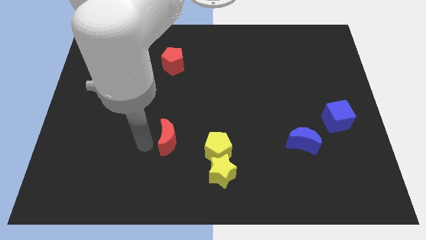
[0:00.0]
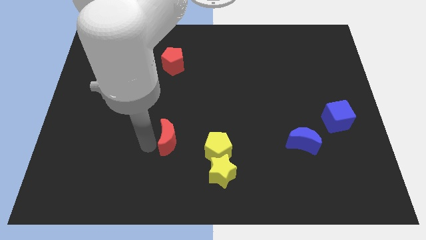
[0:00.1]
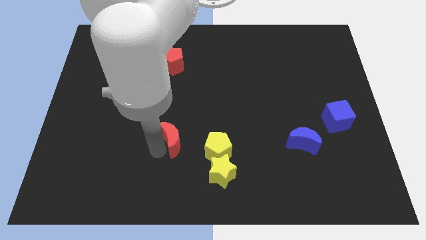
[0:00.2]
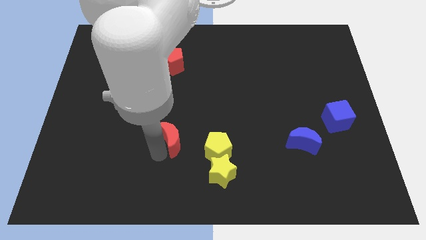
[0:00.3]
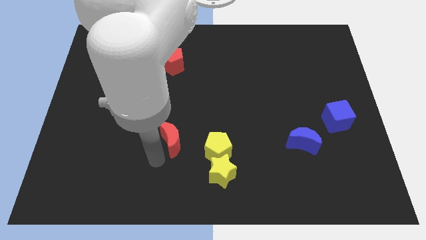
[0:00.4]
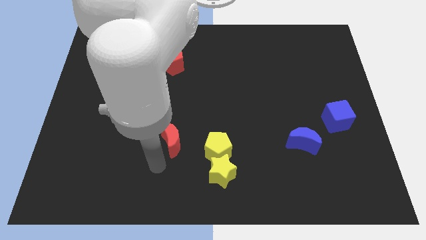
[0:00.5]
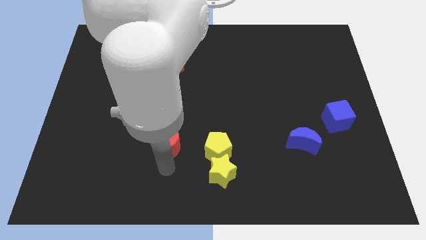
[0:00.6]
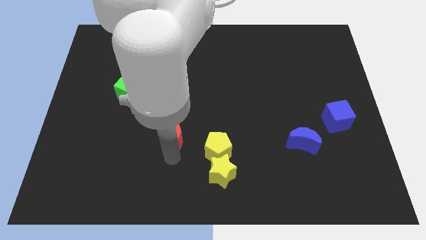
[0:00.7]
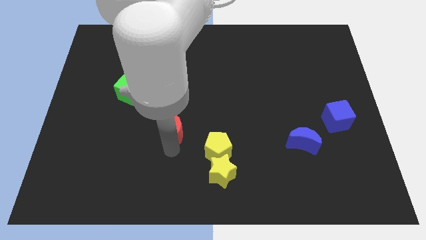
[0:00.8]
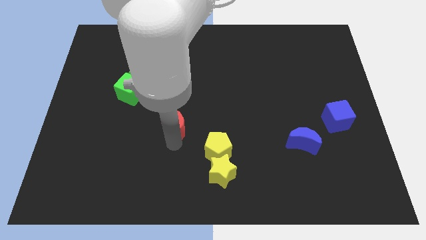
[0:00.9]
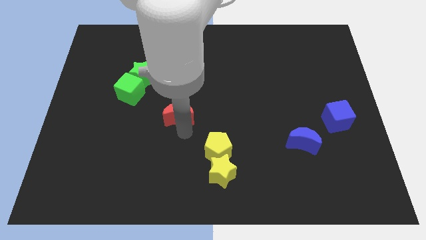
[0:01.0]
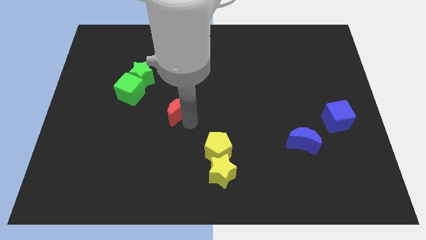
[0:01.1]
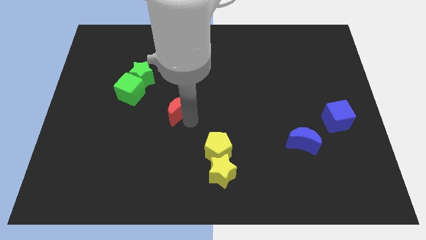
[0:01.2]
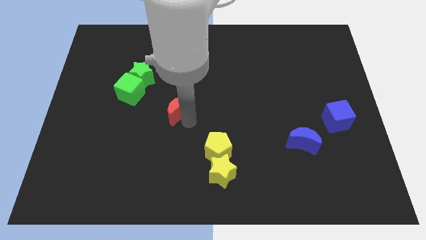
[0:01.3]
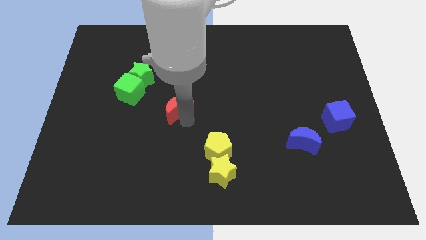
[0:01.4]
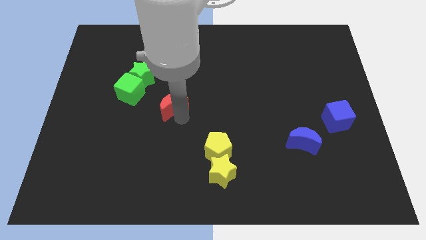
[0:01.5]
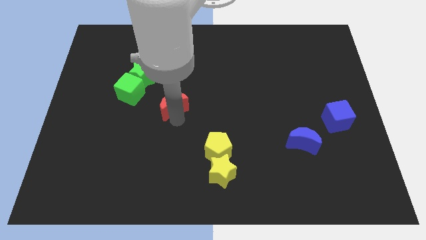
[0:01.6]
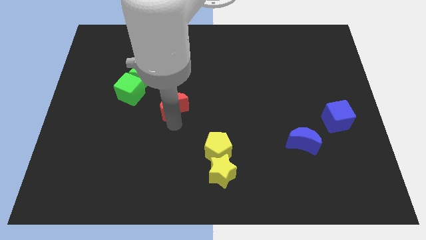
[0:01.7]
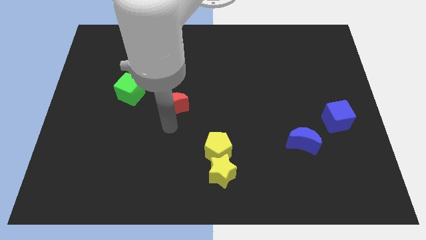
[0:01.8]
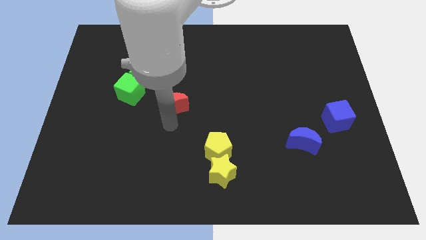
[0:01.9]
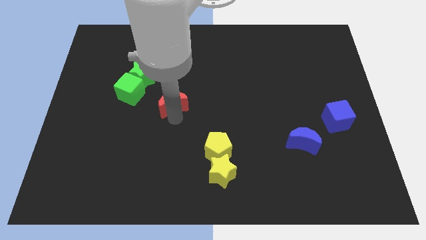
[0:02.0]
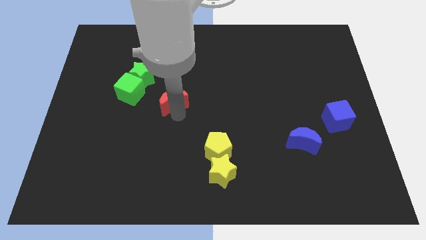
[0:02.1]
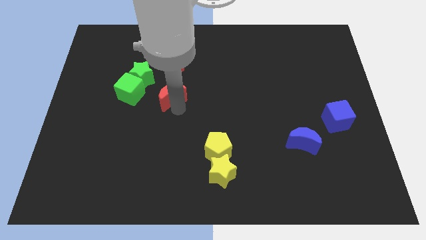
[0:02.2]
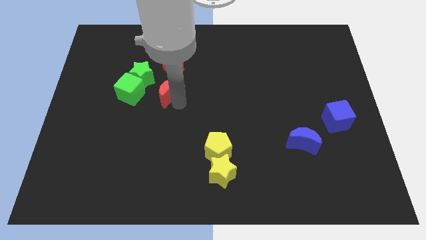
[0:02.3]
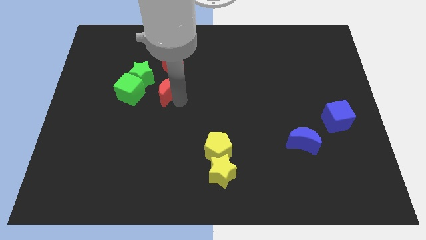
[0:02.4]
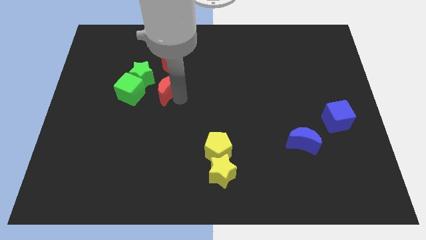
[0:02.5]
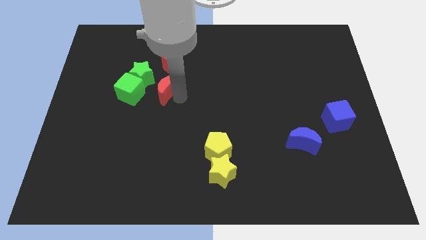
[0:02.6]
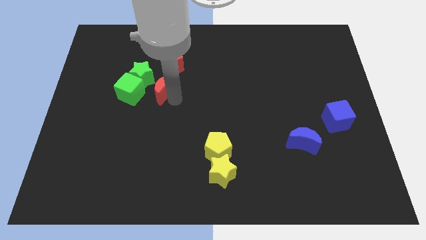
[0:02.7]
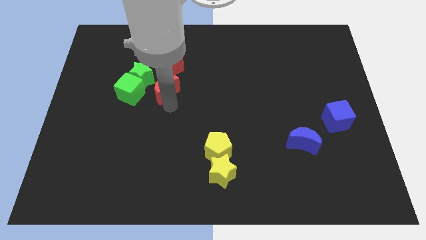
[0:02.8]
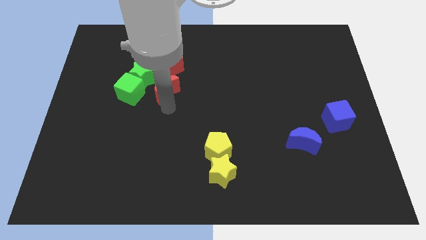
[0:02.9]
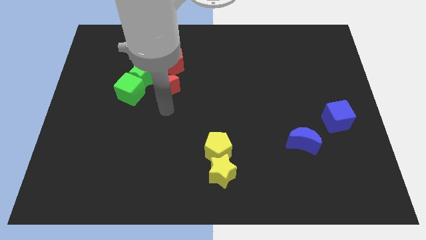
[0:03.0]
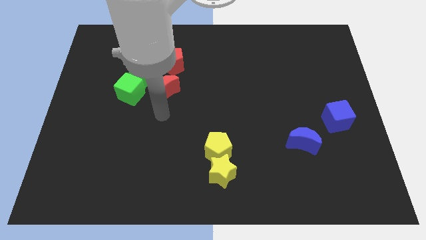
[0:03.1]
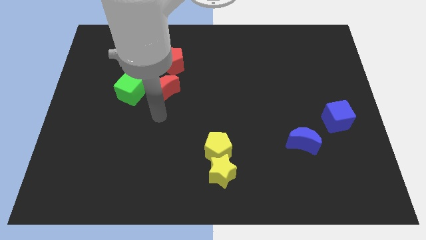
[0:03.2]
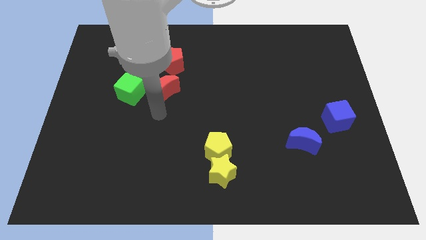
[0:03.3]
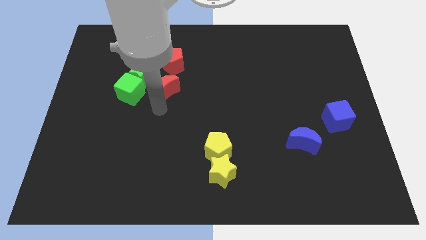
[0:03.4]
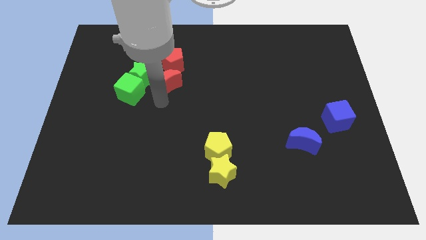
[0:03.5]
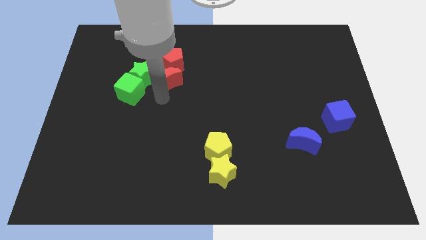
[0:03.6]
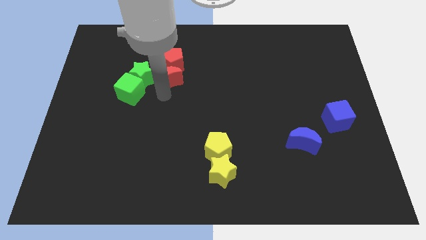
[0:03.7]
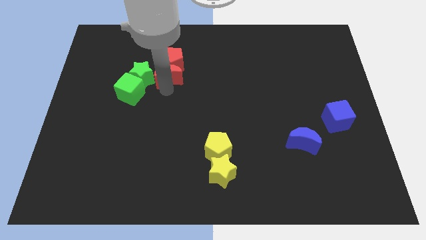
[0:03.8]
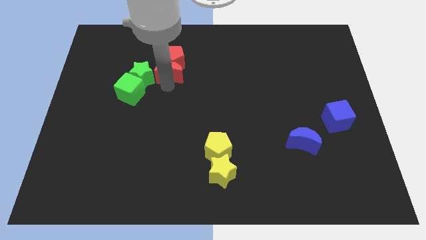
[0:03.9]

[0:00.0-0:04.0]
move the red moon to the bottom side of the red pentagon

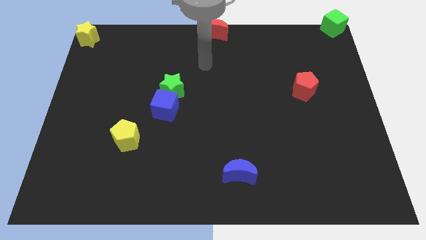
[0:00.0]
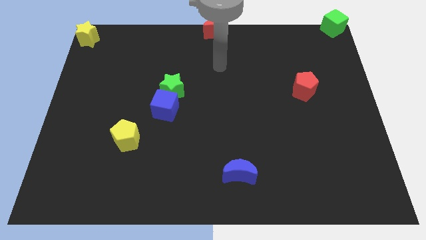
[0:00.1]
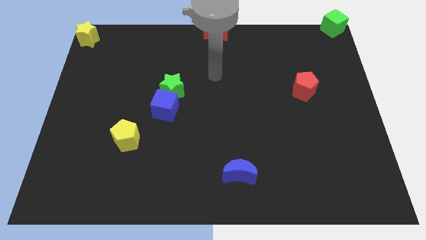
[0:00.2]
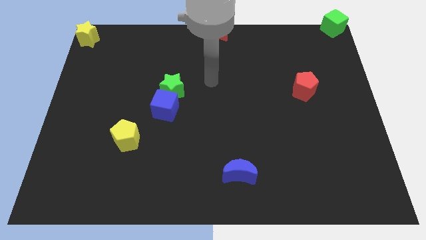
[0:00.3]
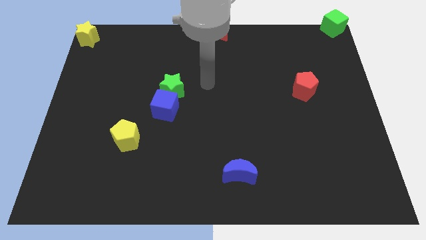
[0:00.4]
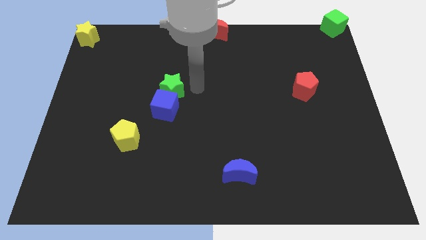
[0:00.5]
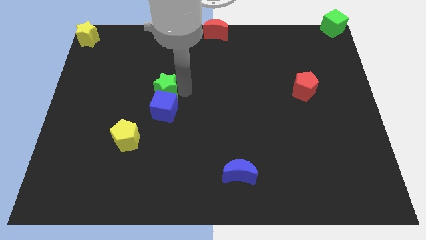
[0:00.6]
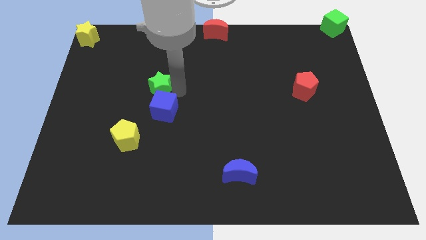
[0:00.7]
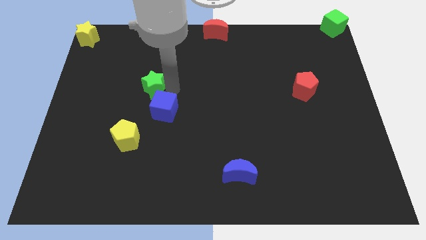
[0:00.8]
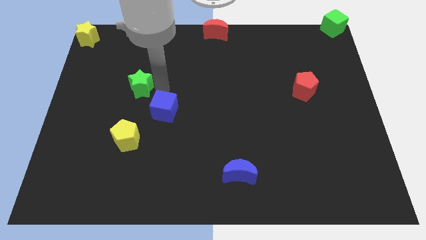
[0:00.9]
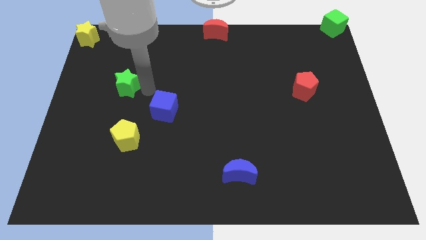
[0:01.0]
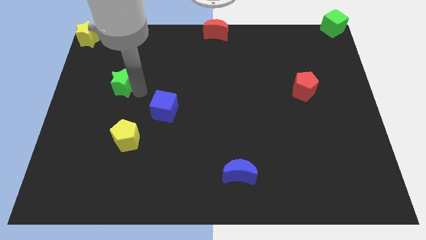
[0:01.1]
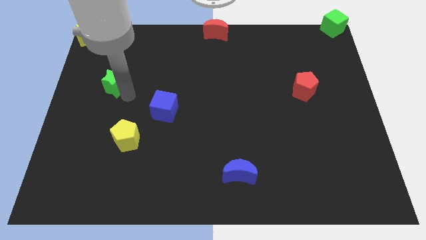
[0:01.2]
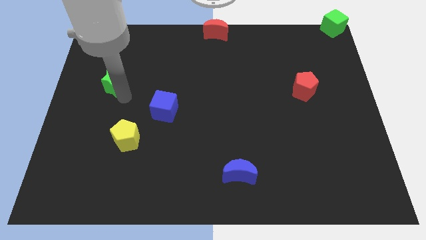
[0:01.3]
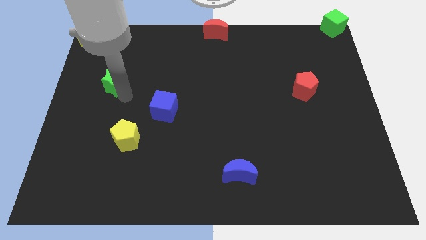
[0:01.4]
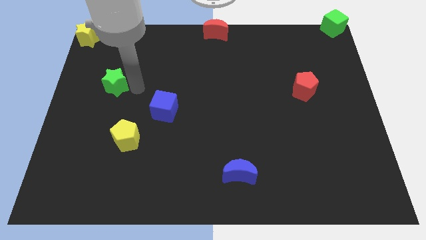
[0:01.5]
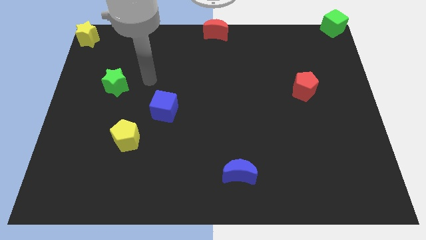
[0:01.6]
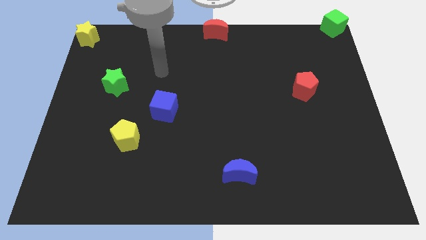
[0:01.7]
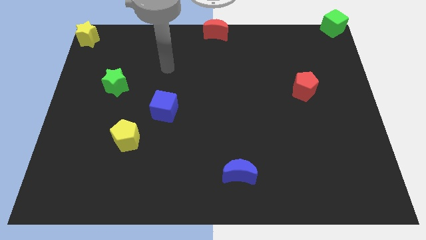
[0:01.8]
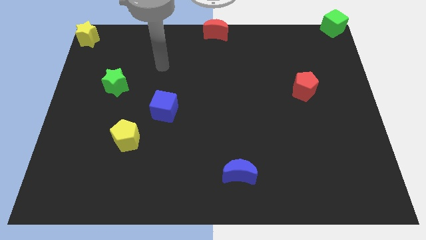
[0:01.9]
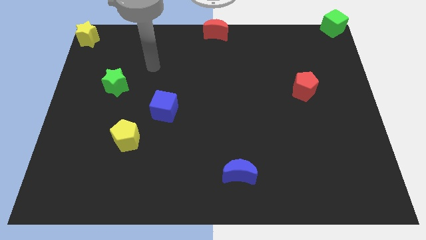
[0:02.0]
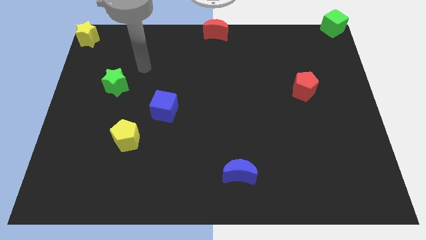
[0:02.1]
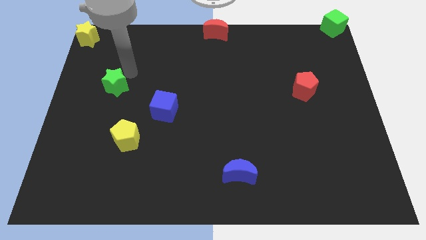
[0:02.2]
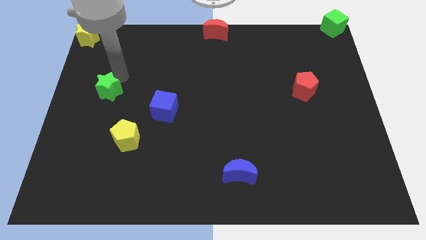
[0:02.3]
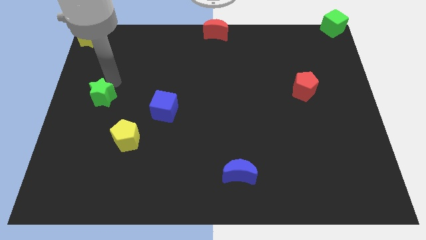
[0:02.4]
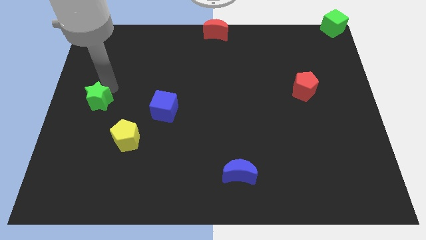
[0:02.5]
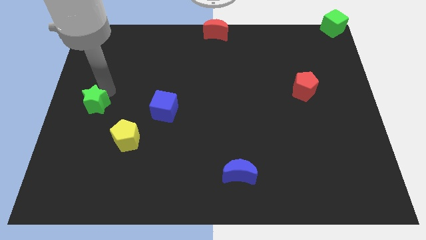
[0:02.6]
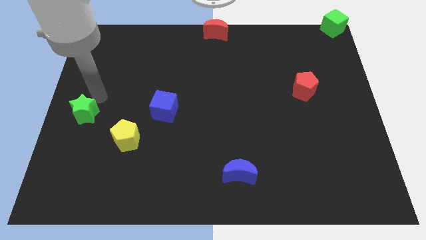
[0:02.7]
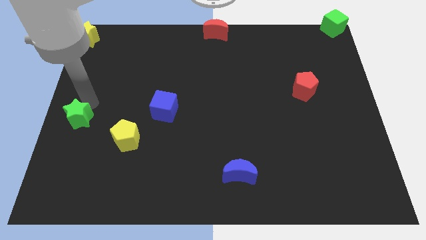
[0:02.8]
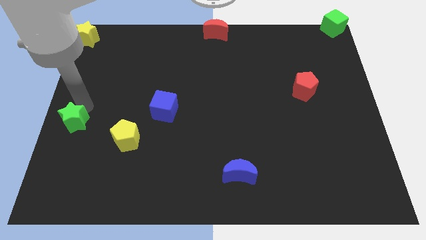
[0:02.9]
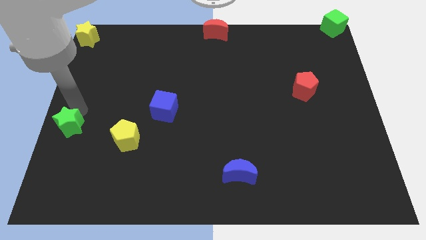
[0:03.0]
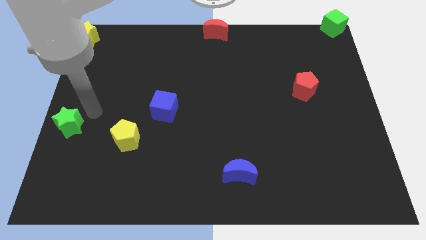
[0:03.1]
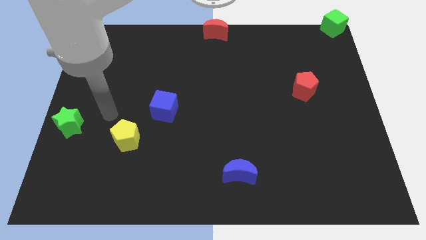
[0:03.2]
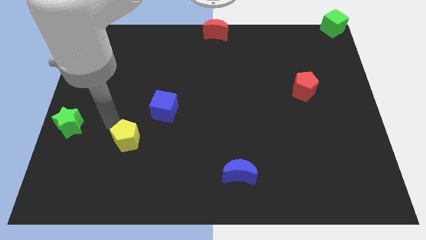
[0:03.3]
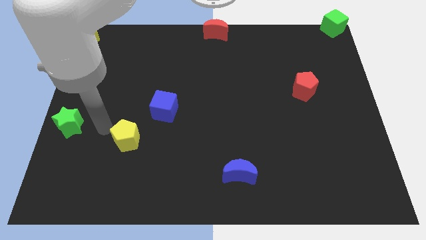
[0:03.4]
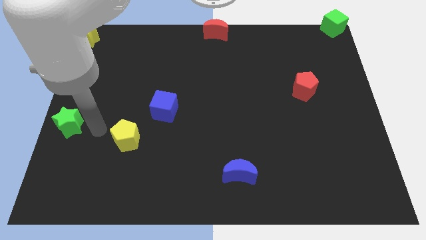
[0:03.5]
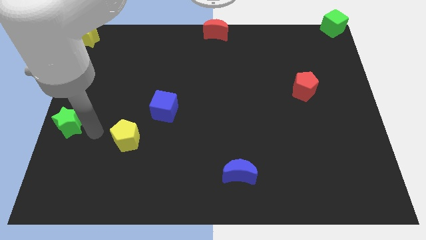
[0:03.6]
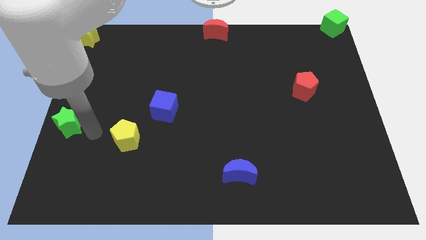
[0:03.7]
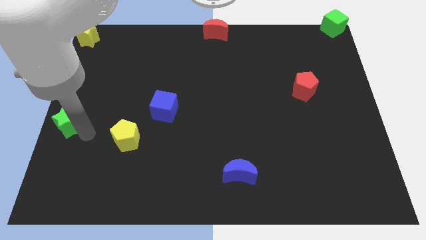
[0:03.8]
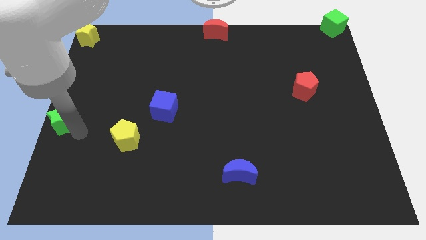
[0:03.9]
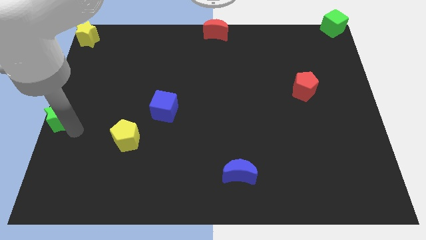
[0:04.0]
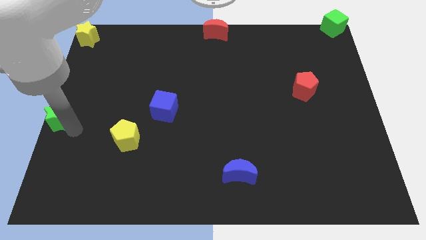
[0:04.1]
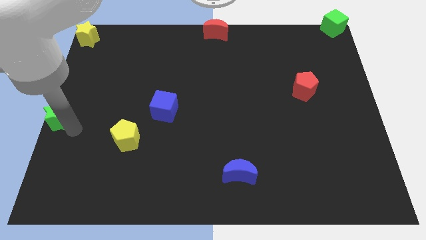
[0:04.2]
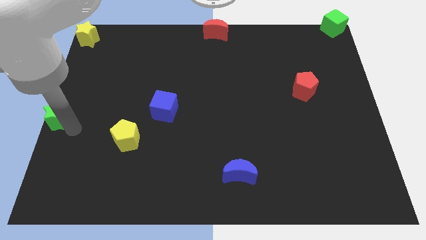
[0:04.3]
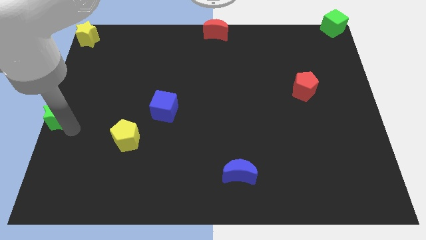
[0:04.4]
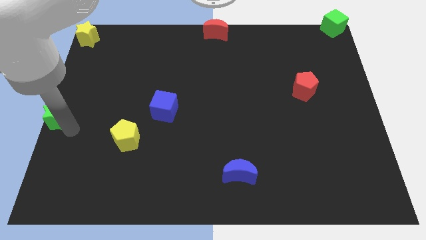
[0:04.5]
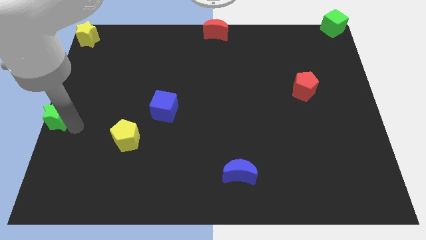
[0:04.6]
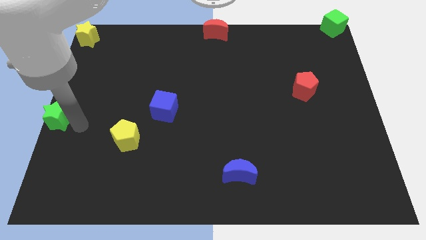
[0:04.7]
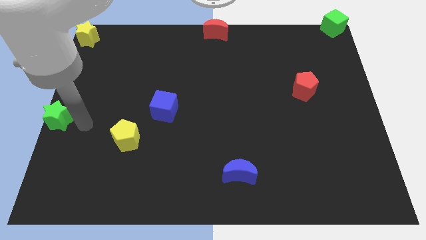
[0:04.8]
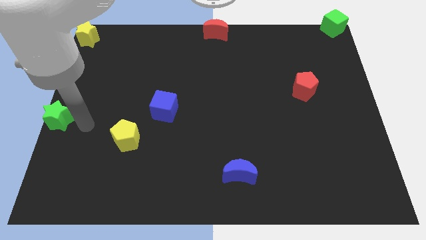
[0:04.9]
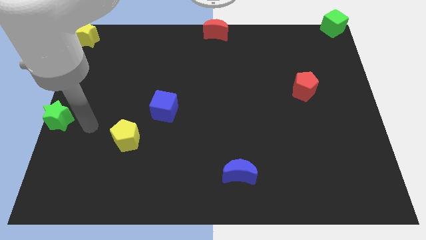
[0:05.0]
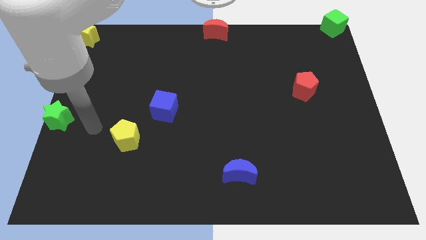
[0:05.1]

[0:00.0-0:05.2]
push the green star to the left center of the board
